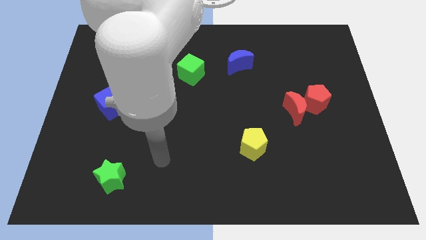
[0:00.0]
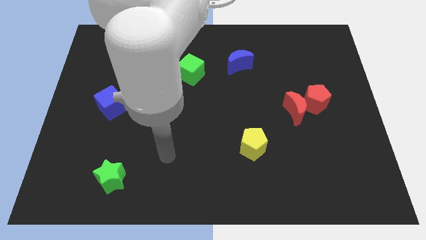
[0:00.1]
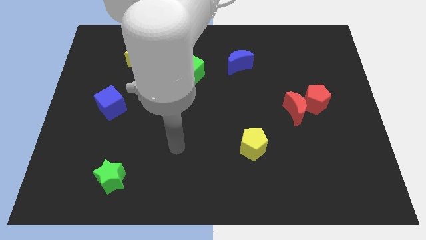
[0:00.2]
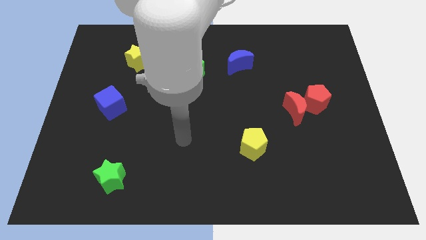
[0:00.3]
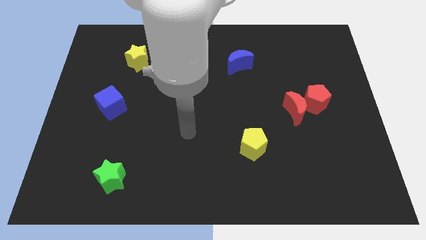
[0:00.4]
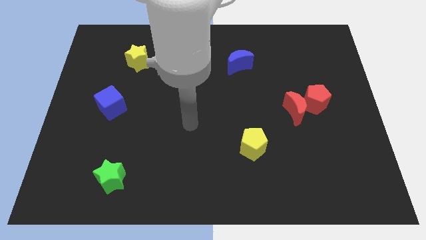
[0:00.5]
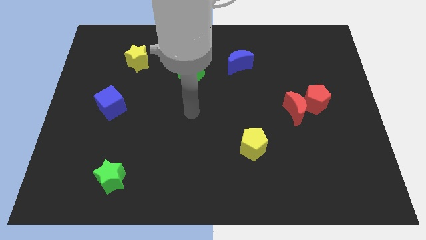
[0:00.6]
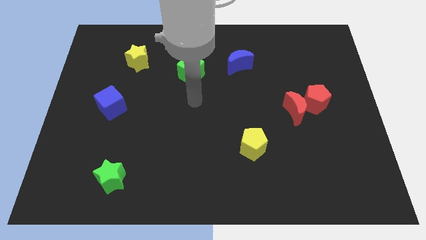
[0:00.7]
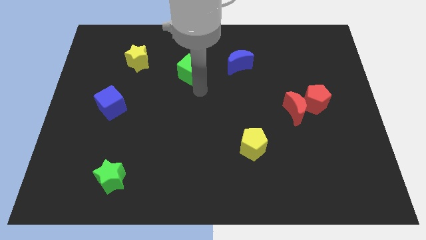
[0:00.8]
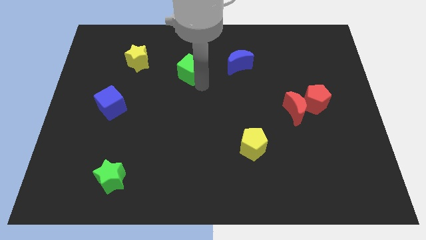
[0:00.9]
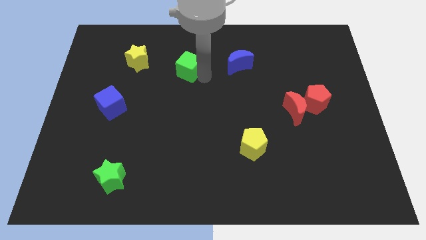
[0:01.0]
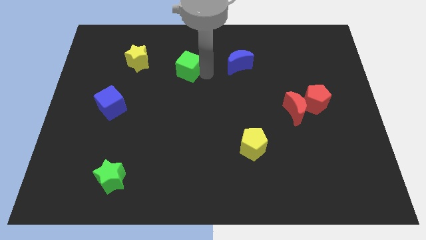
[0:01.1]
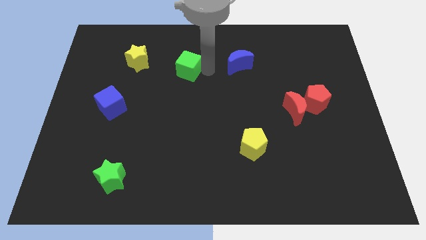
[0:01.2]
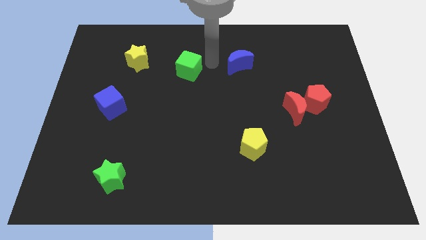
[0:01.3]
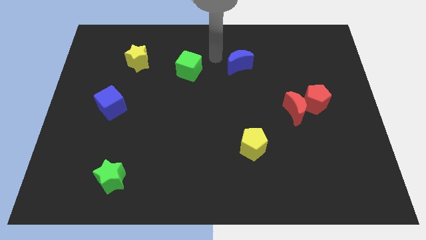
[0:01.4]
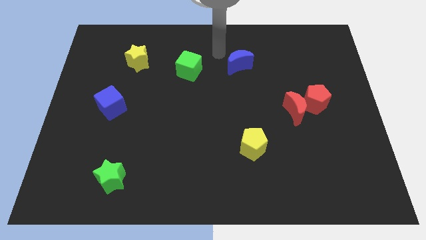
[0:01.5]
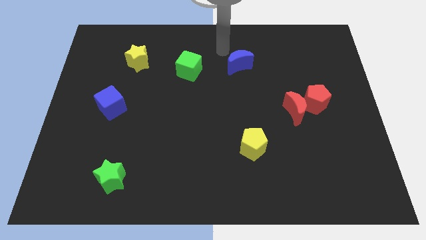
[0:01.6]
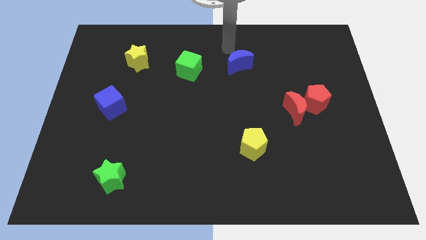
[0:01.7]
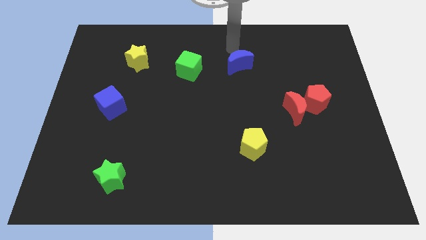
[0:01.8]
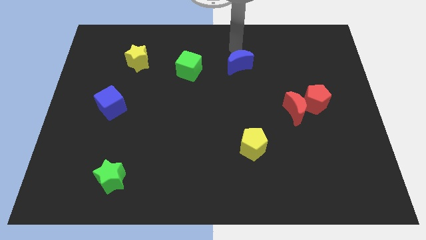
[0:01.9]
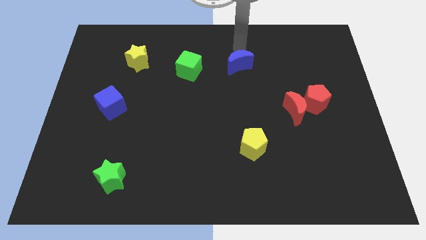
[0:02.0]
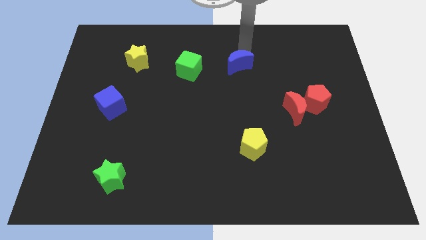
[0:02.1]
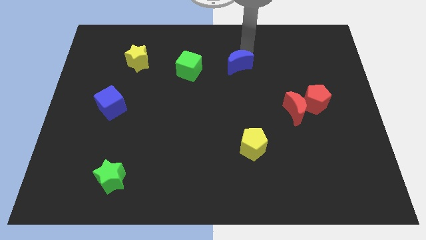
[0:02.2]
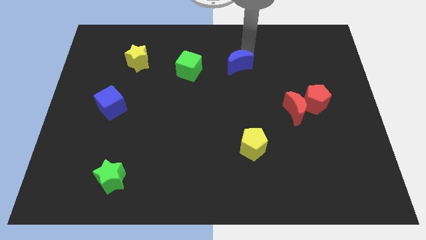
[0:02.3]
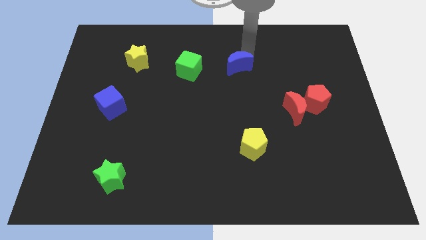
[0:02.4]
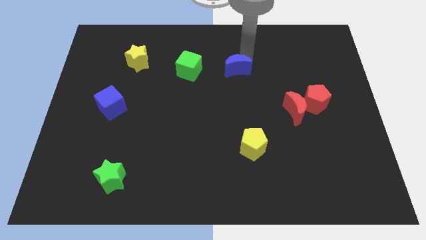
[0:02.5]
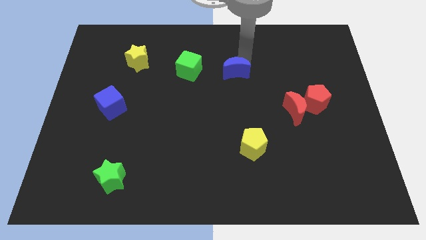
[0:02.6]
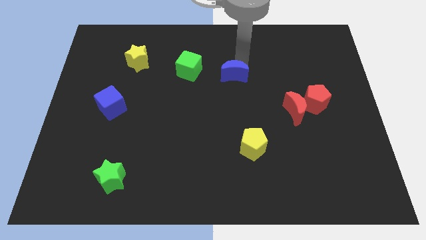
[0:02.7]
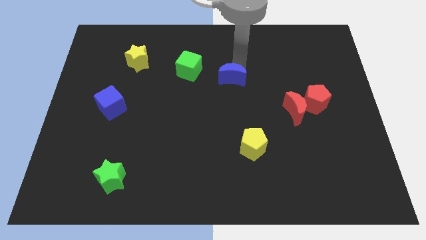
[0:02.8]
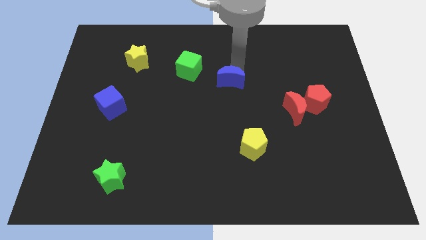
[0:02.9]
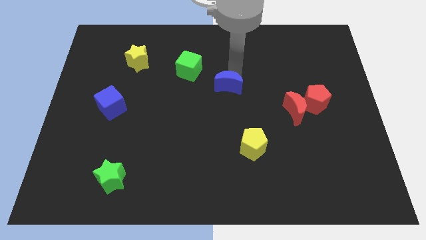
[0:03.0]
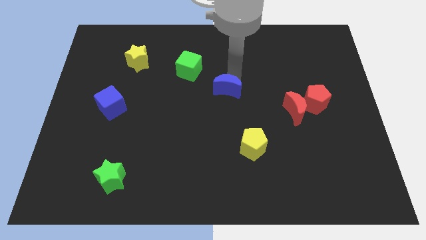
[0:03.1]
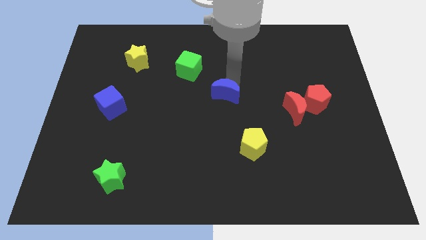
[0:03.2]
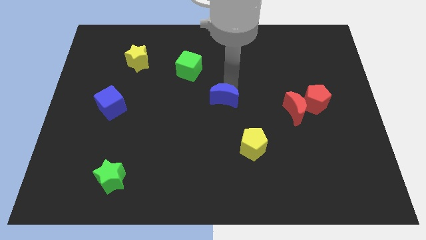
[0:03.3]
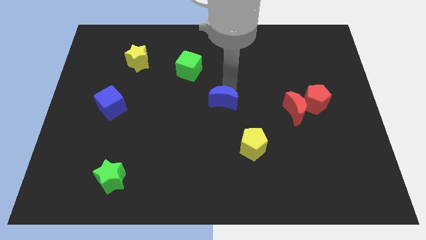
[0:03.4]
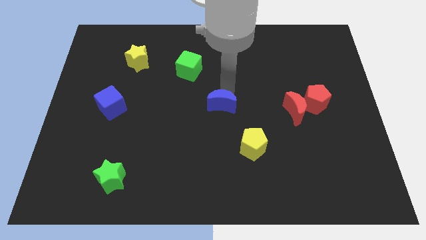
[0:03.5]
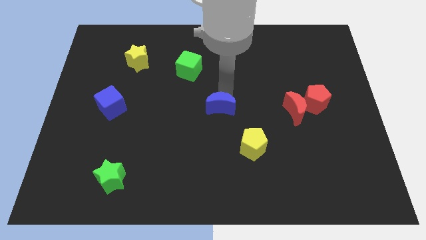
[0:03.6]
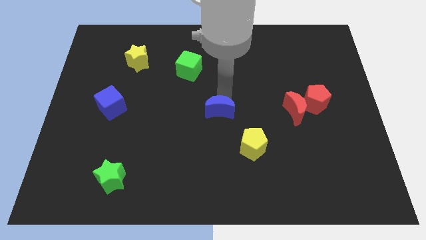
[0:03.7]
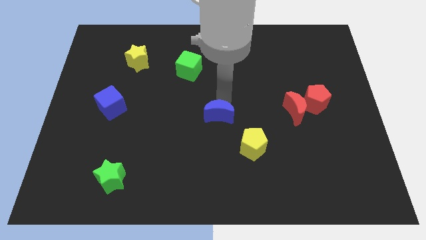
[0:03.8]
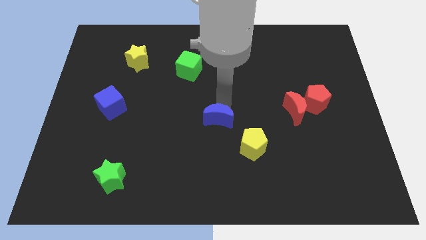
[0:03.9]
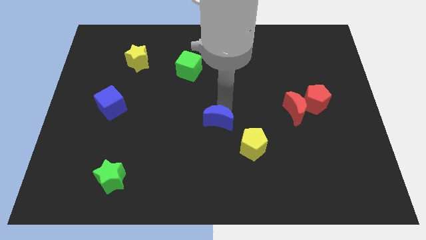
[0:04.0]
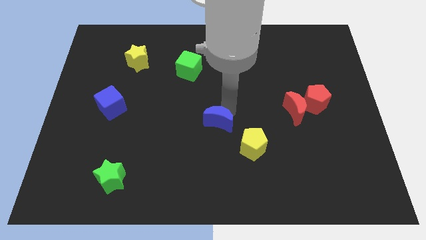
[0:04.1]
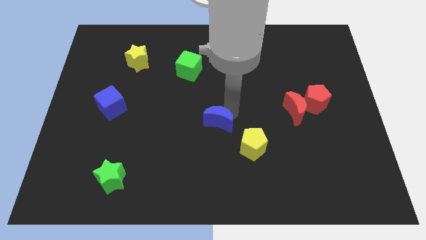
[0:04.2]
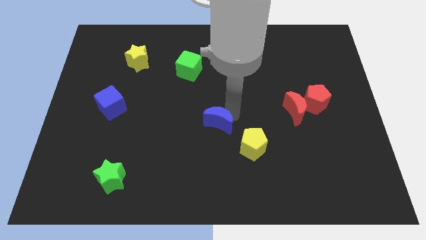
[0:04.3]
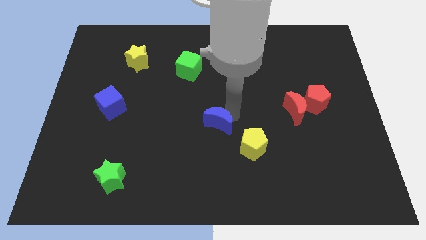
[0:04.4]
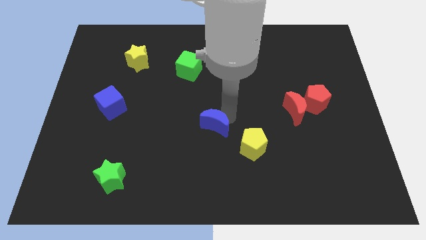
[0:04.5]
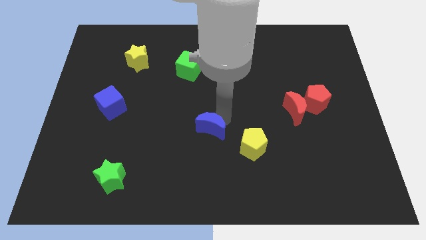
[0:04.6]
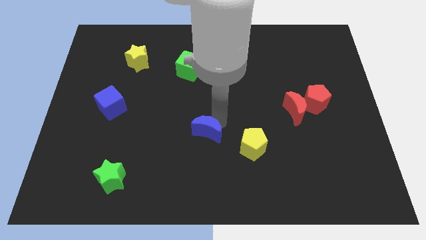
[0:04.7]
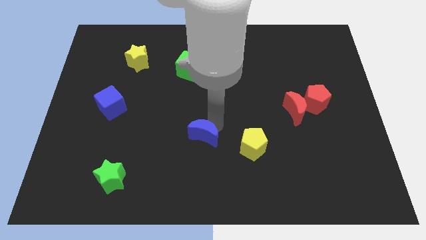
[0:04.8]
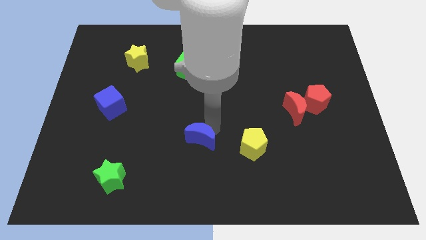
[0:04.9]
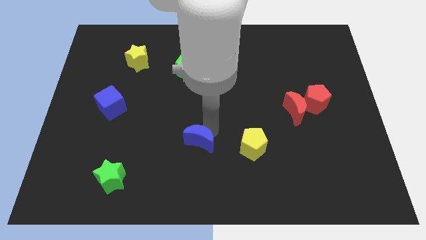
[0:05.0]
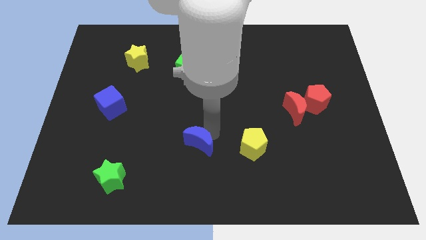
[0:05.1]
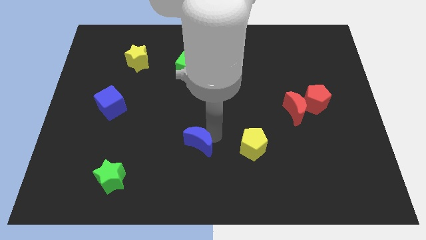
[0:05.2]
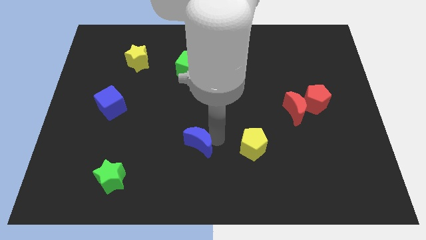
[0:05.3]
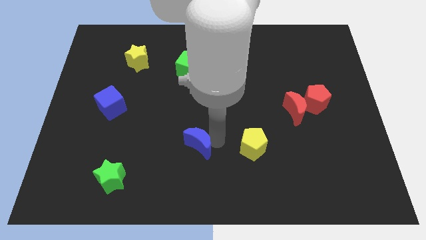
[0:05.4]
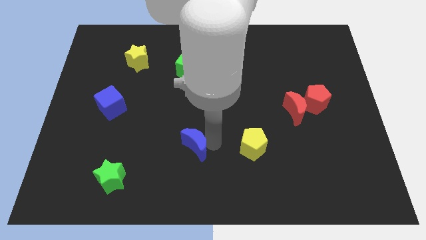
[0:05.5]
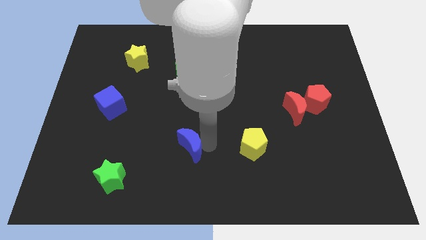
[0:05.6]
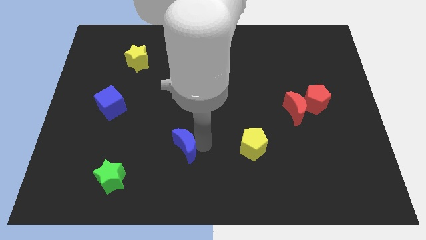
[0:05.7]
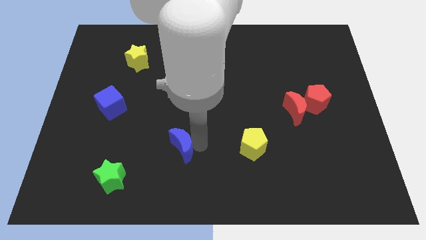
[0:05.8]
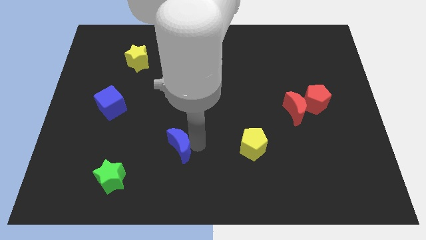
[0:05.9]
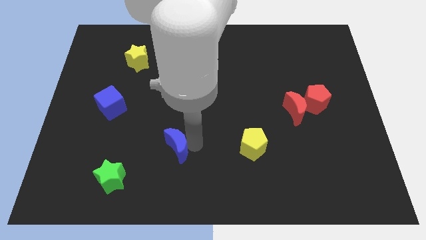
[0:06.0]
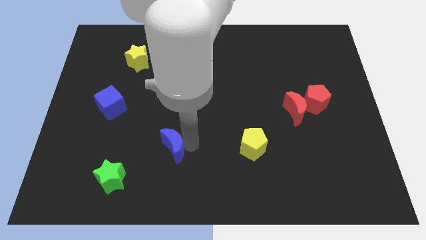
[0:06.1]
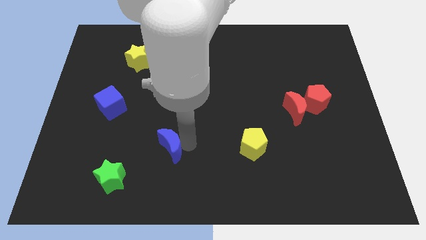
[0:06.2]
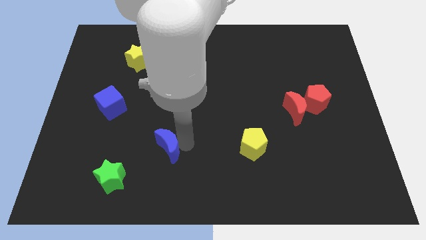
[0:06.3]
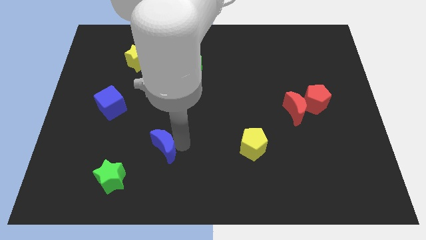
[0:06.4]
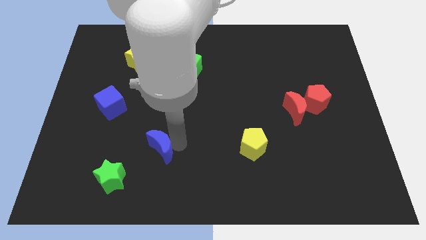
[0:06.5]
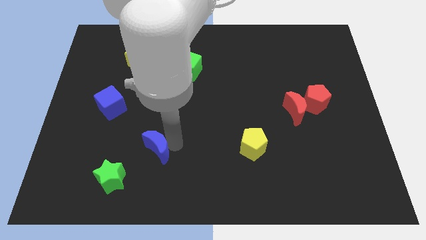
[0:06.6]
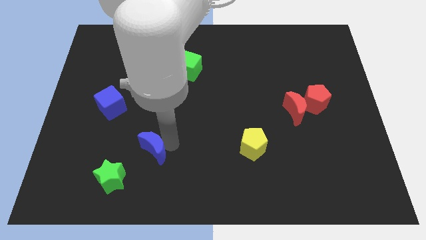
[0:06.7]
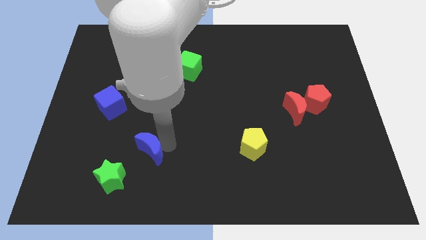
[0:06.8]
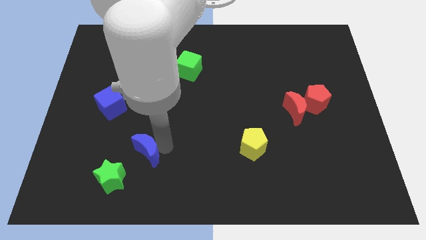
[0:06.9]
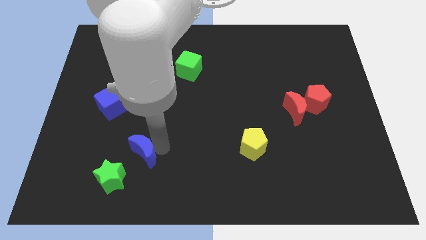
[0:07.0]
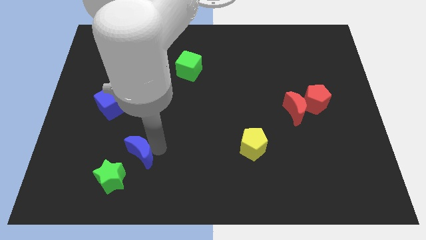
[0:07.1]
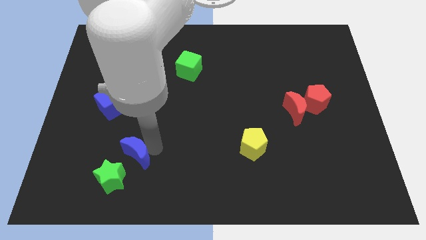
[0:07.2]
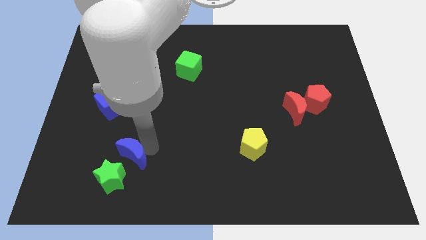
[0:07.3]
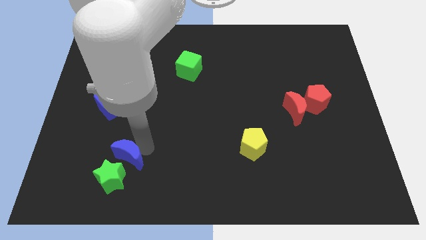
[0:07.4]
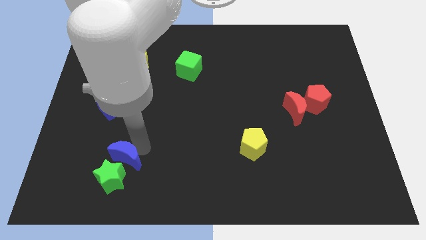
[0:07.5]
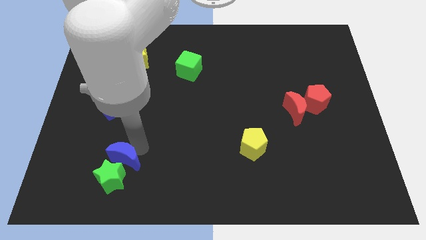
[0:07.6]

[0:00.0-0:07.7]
move the blue moon next to the green star

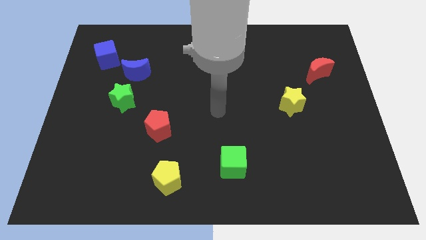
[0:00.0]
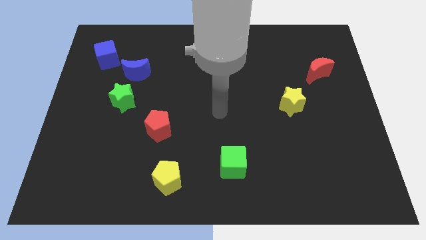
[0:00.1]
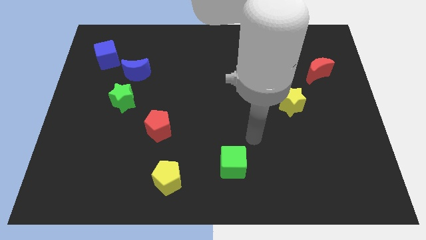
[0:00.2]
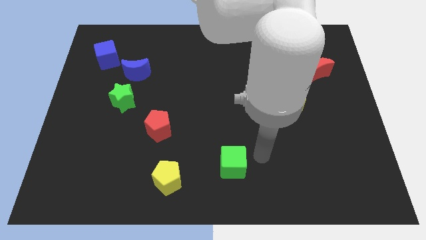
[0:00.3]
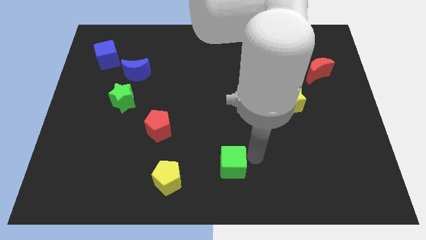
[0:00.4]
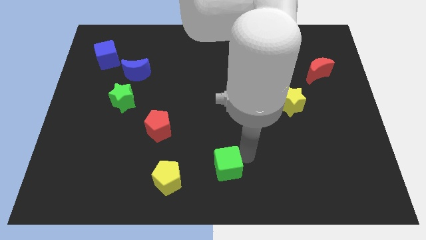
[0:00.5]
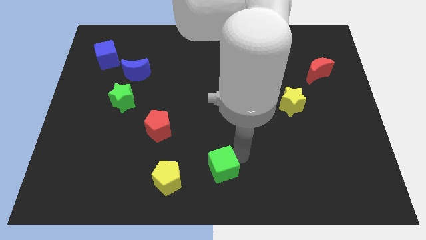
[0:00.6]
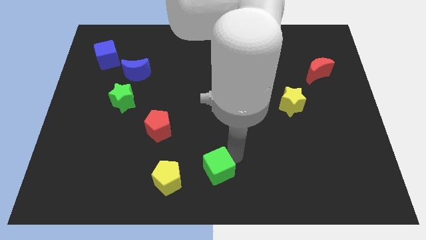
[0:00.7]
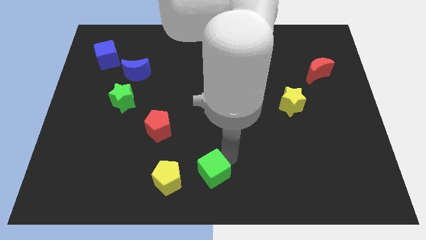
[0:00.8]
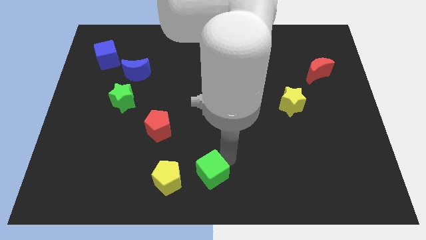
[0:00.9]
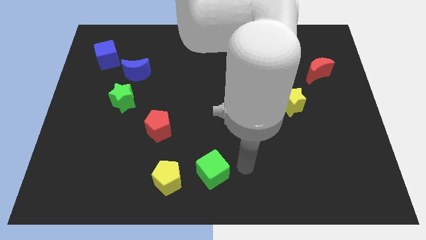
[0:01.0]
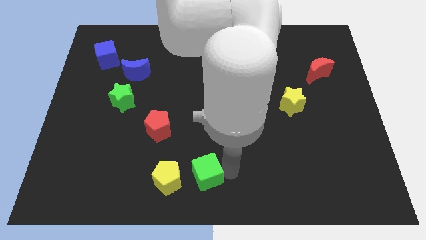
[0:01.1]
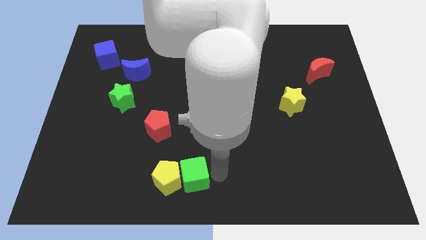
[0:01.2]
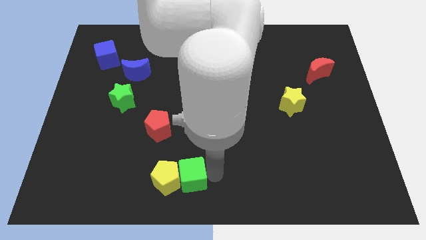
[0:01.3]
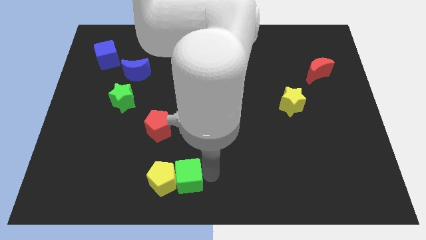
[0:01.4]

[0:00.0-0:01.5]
push the green cube close to the yellow pentagon
